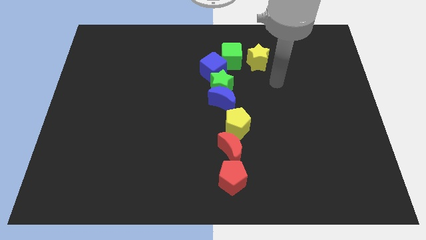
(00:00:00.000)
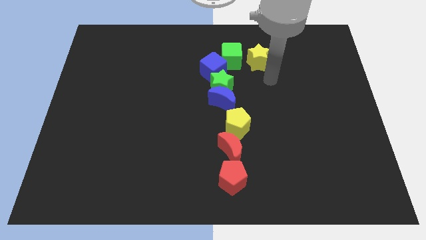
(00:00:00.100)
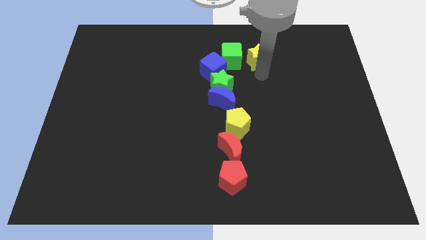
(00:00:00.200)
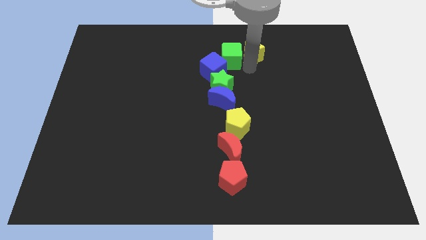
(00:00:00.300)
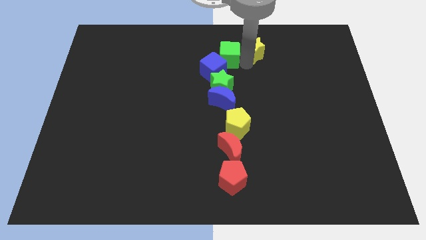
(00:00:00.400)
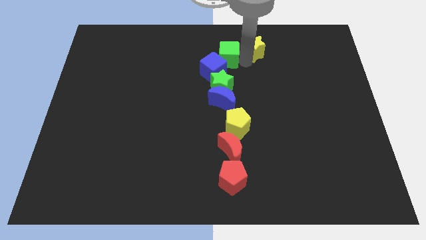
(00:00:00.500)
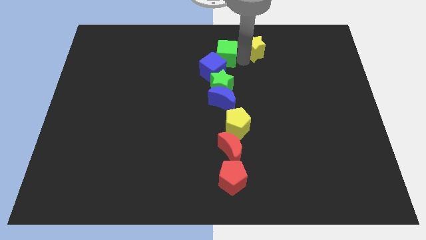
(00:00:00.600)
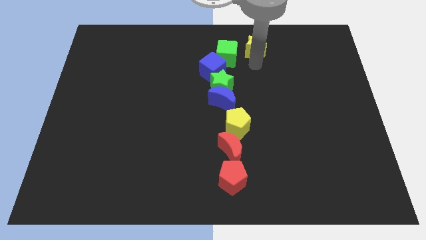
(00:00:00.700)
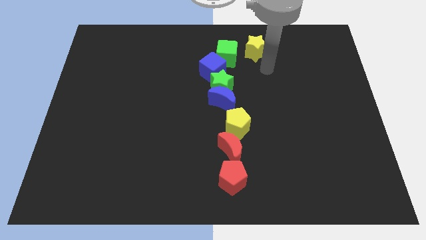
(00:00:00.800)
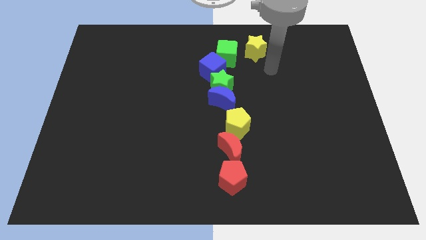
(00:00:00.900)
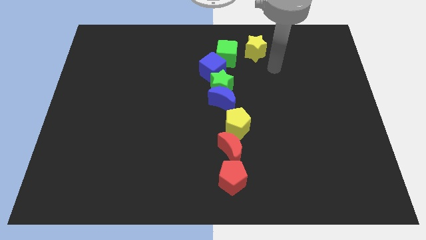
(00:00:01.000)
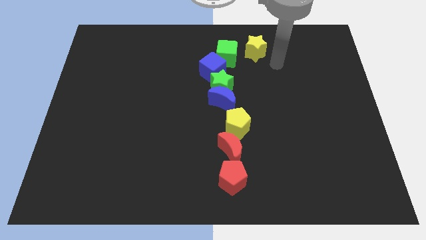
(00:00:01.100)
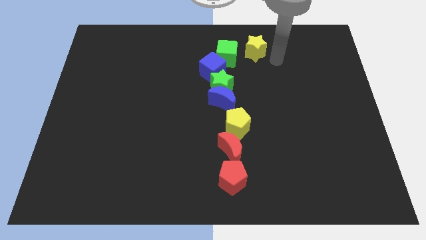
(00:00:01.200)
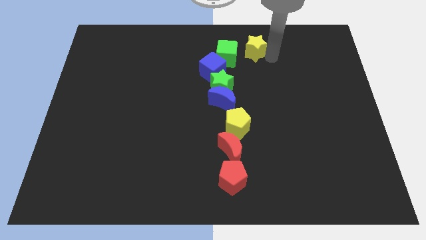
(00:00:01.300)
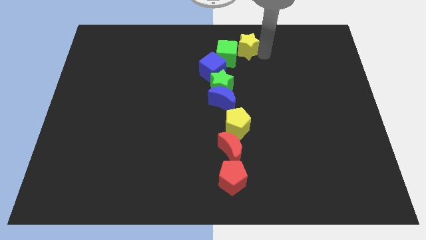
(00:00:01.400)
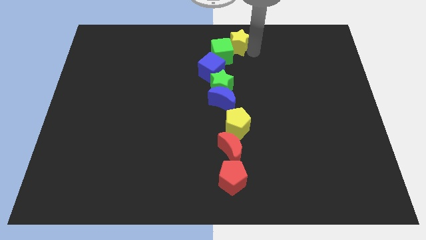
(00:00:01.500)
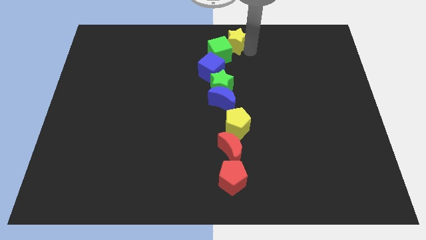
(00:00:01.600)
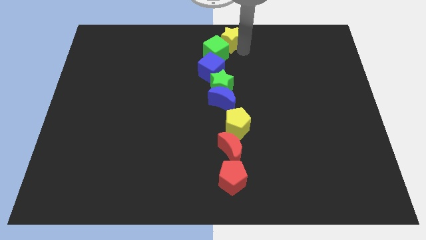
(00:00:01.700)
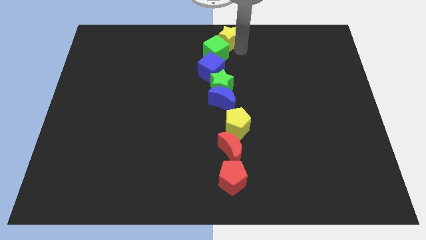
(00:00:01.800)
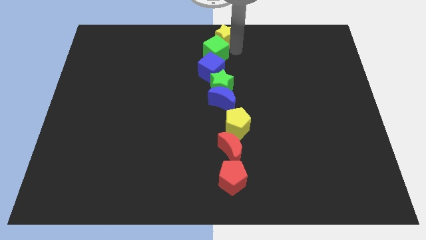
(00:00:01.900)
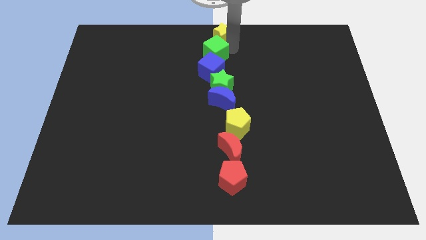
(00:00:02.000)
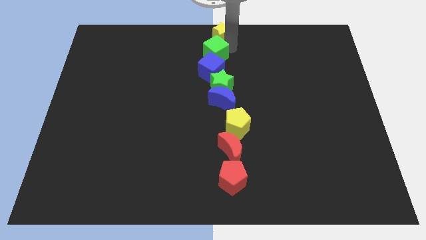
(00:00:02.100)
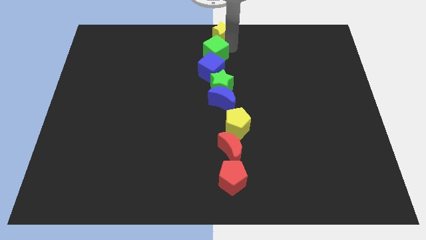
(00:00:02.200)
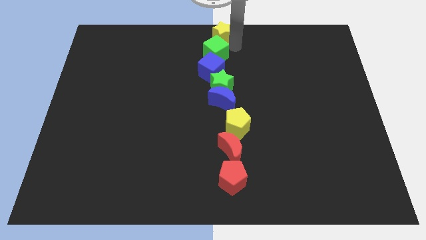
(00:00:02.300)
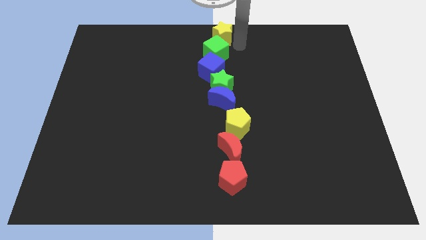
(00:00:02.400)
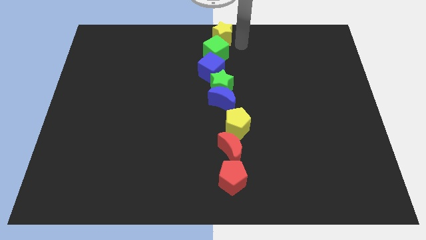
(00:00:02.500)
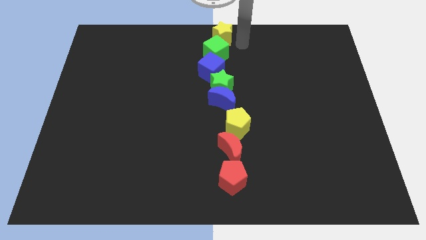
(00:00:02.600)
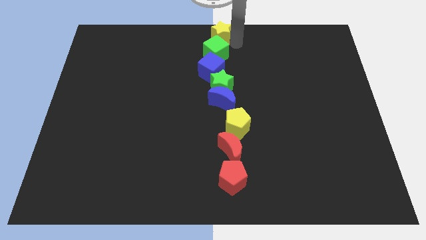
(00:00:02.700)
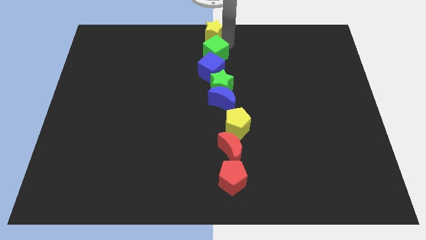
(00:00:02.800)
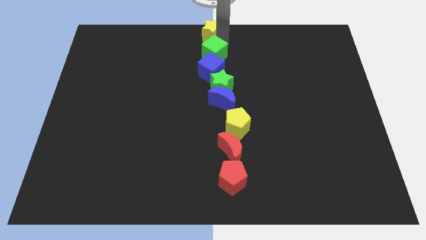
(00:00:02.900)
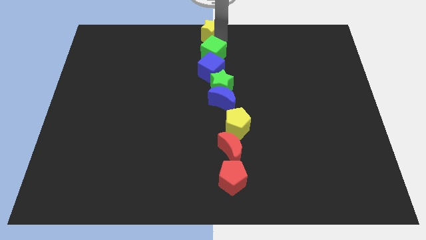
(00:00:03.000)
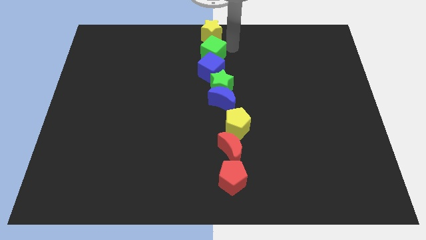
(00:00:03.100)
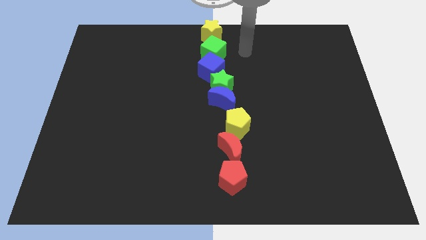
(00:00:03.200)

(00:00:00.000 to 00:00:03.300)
push the yellow star to the top center of the board

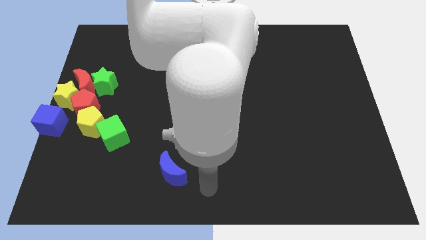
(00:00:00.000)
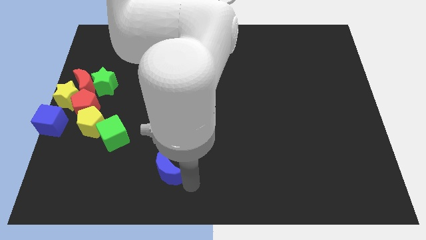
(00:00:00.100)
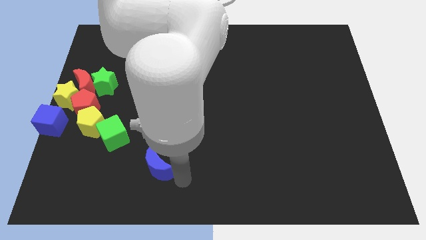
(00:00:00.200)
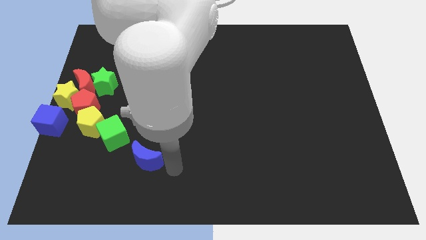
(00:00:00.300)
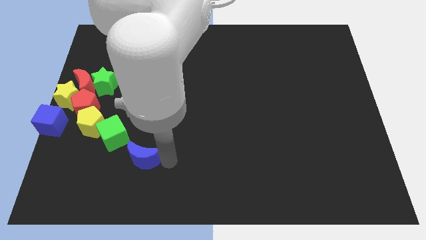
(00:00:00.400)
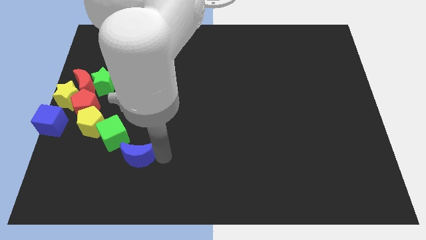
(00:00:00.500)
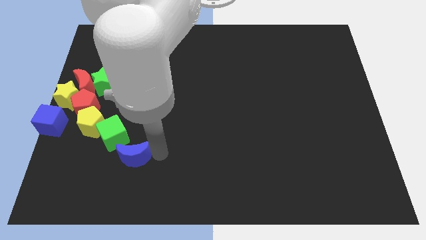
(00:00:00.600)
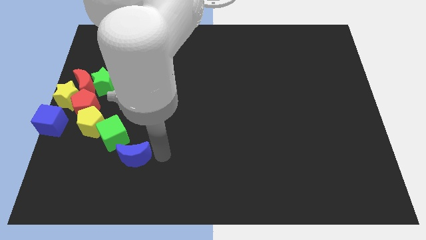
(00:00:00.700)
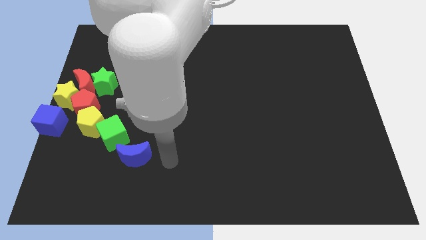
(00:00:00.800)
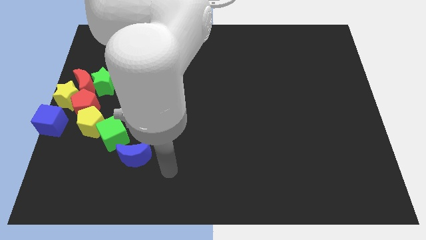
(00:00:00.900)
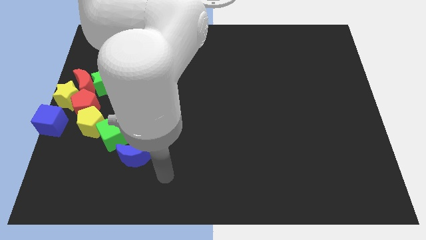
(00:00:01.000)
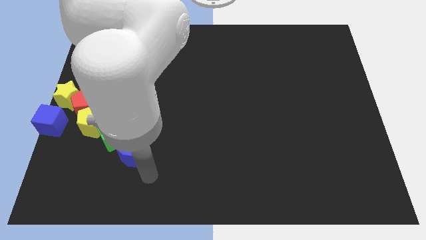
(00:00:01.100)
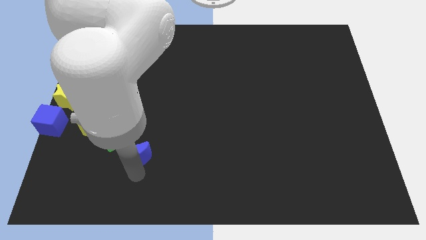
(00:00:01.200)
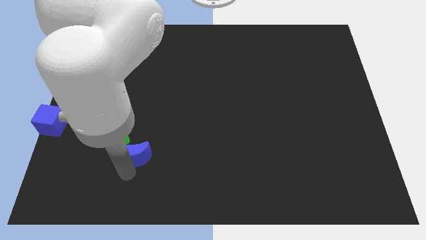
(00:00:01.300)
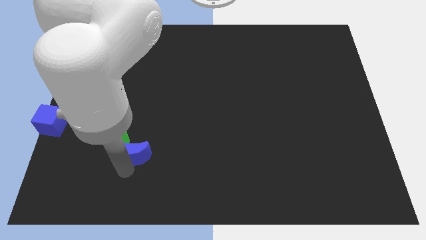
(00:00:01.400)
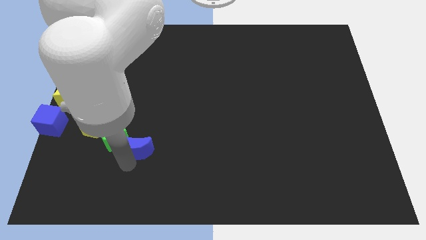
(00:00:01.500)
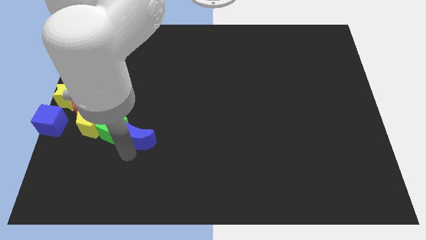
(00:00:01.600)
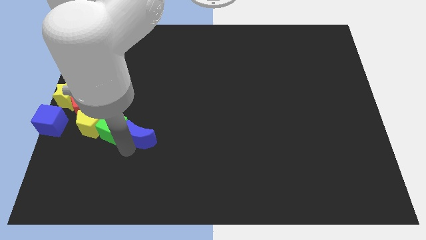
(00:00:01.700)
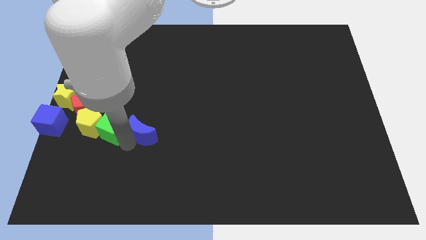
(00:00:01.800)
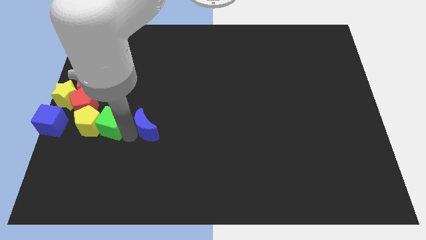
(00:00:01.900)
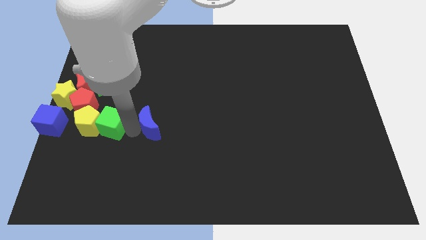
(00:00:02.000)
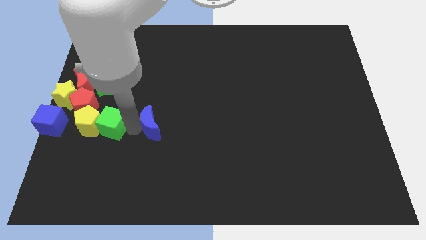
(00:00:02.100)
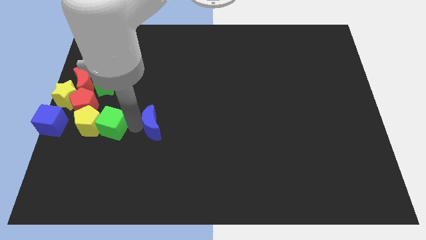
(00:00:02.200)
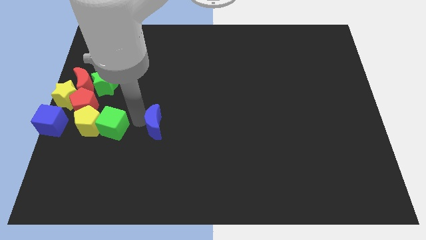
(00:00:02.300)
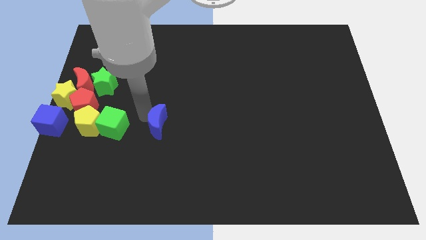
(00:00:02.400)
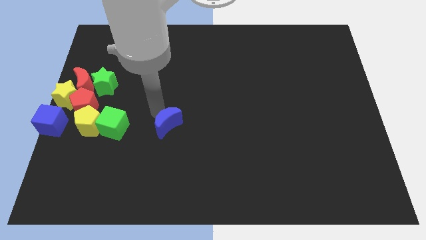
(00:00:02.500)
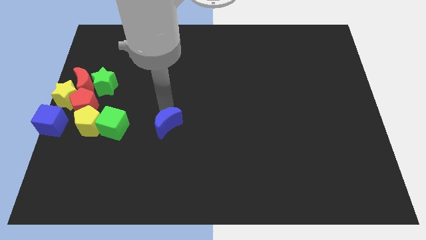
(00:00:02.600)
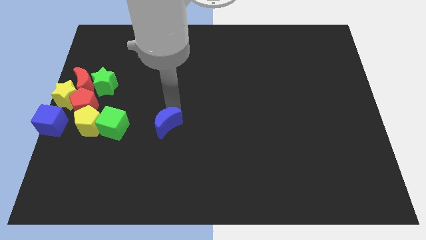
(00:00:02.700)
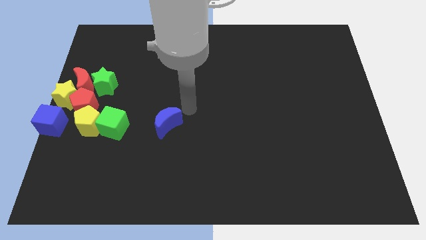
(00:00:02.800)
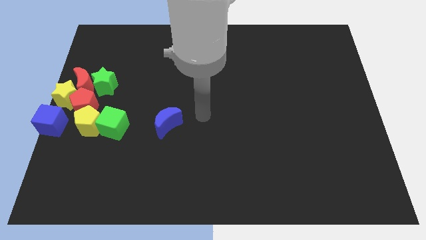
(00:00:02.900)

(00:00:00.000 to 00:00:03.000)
place the blue crescent to the right of the green cube

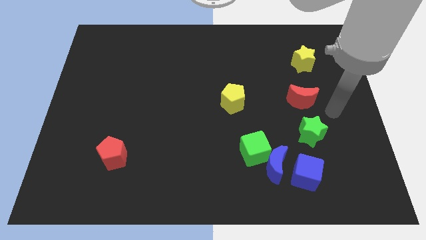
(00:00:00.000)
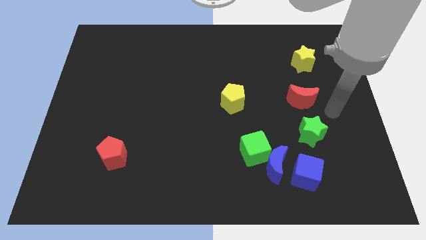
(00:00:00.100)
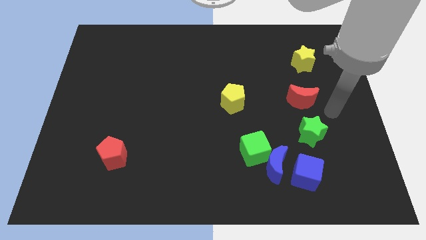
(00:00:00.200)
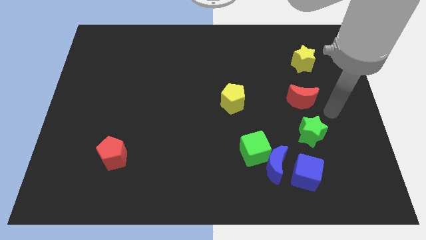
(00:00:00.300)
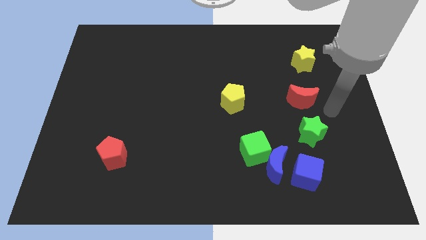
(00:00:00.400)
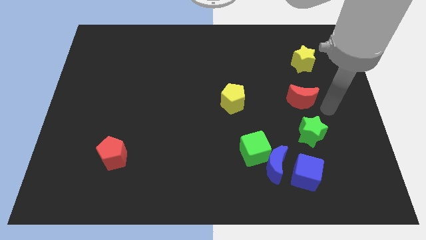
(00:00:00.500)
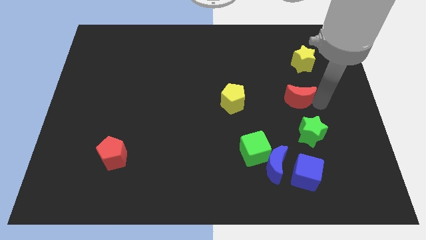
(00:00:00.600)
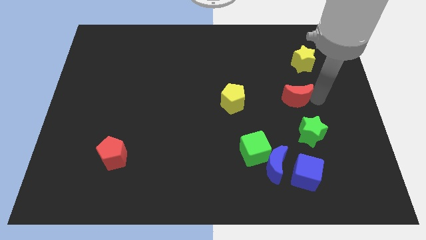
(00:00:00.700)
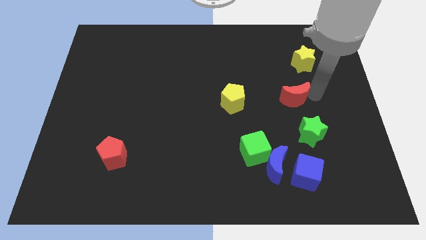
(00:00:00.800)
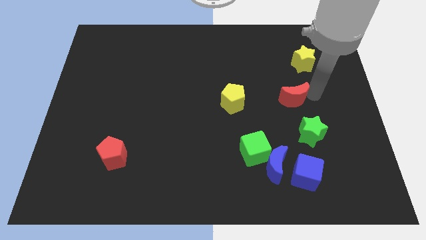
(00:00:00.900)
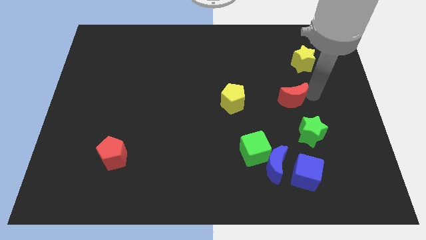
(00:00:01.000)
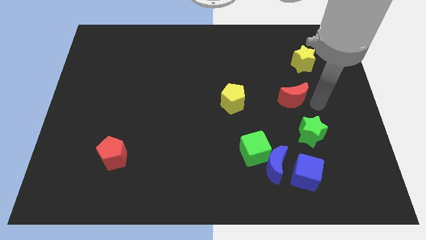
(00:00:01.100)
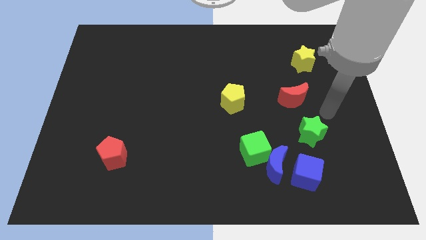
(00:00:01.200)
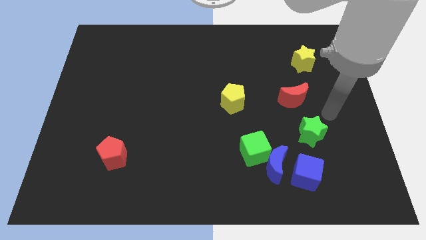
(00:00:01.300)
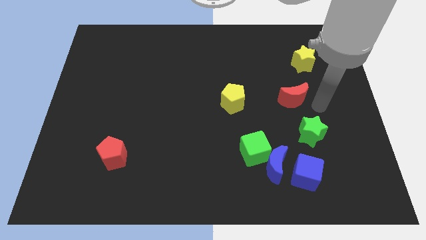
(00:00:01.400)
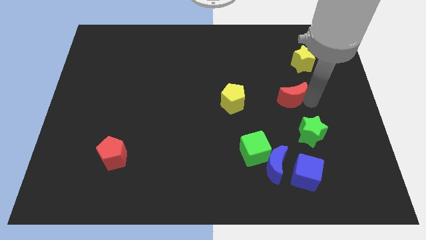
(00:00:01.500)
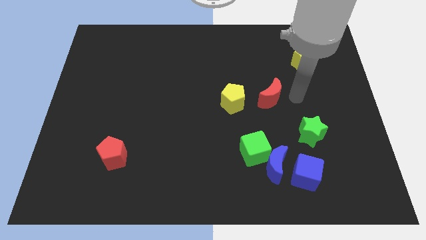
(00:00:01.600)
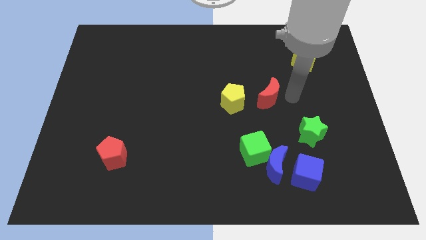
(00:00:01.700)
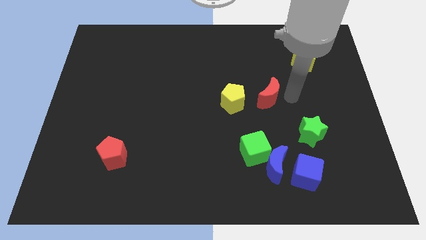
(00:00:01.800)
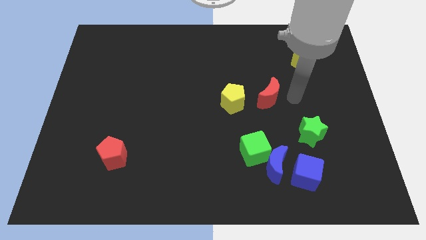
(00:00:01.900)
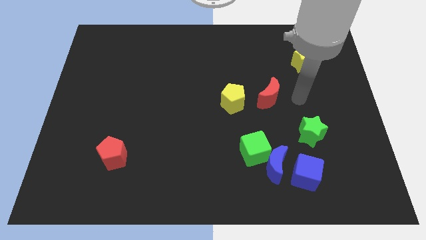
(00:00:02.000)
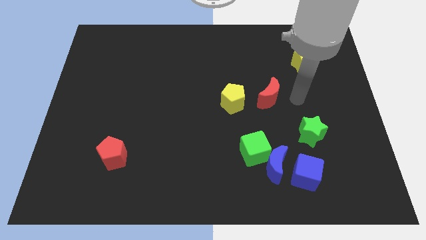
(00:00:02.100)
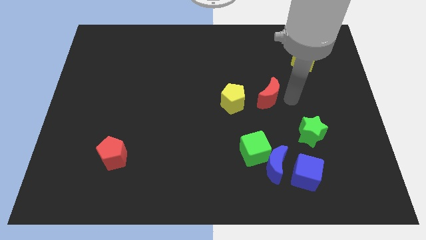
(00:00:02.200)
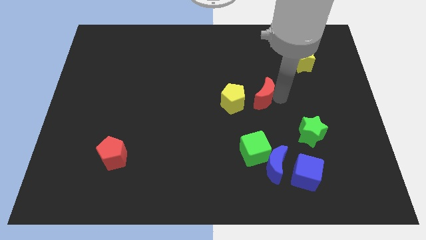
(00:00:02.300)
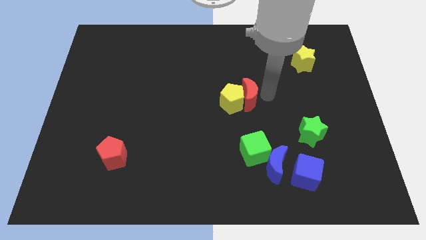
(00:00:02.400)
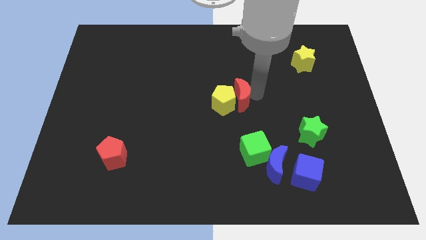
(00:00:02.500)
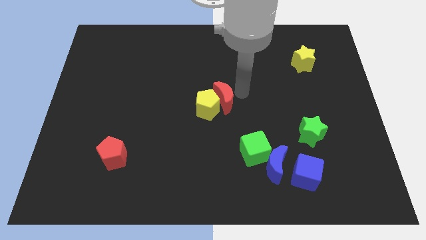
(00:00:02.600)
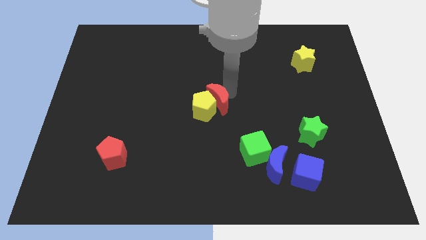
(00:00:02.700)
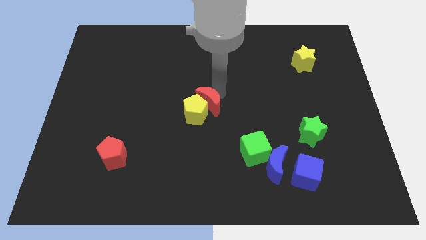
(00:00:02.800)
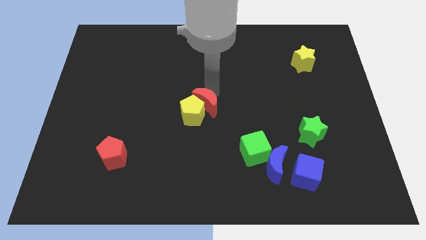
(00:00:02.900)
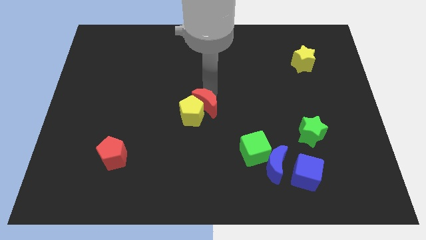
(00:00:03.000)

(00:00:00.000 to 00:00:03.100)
move red moon into yellow pentagon
